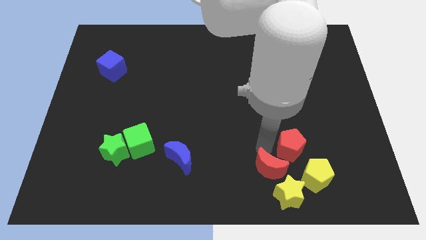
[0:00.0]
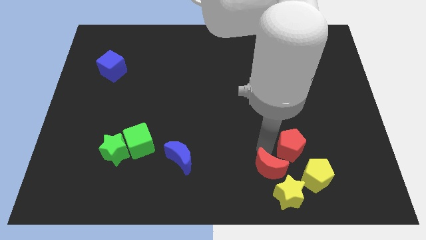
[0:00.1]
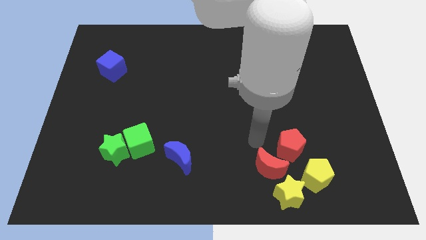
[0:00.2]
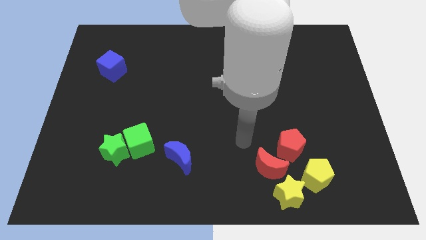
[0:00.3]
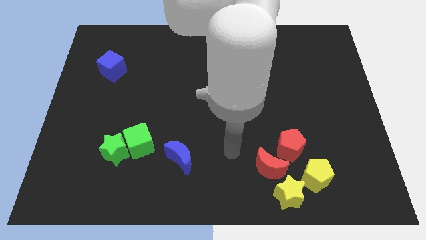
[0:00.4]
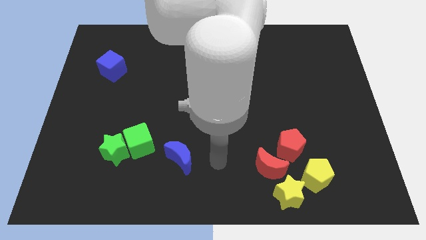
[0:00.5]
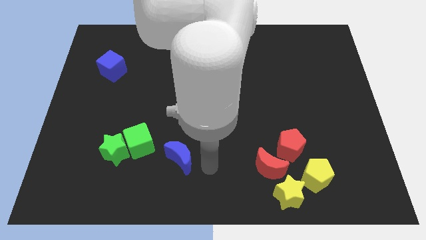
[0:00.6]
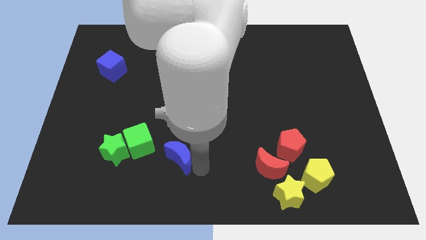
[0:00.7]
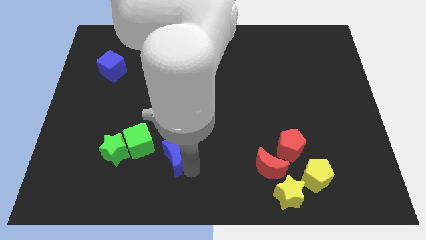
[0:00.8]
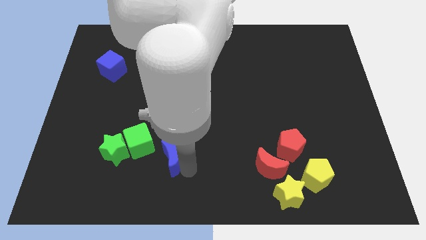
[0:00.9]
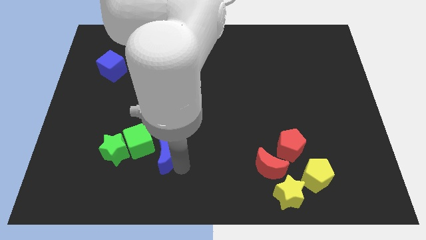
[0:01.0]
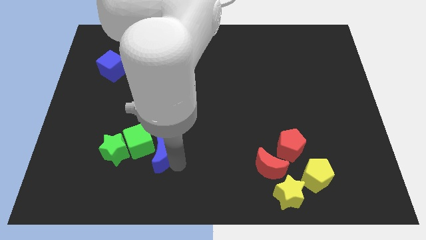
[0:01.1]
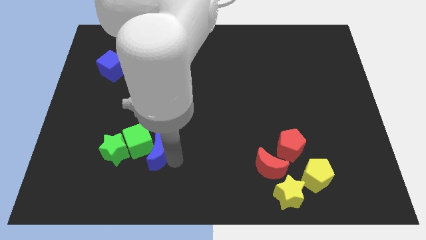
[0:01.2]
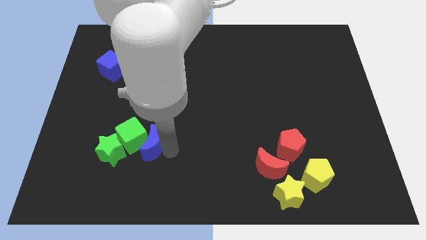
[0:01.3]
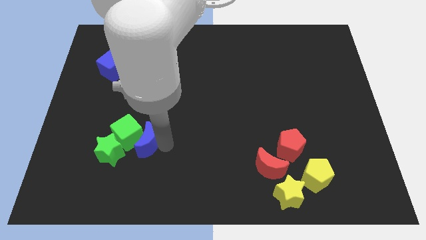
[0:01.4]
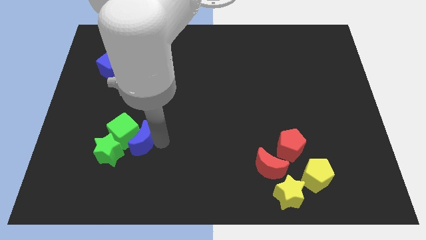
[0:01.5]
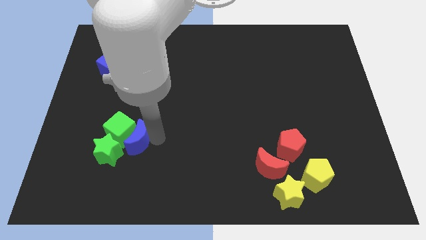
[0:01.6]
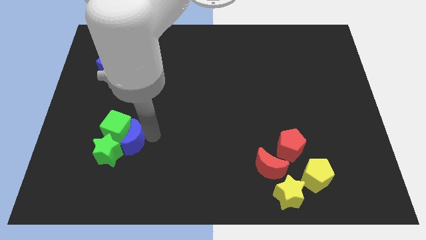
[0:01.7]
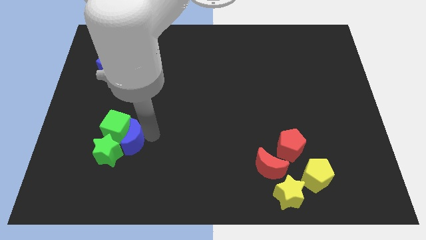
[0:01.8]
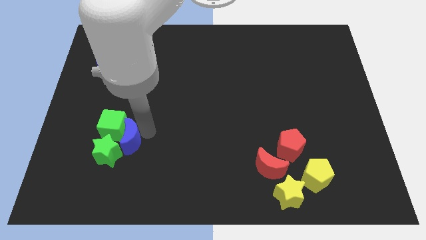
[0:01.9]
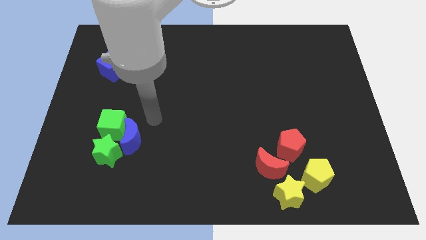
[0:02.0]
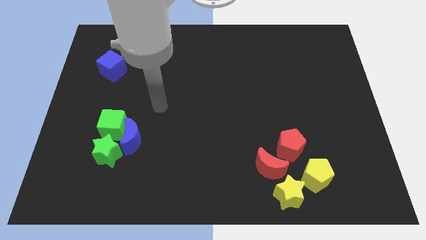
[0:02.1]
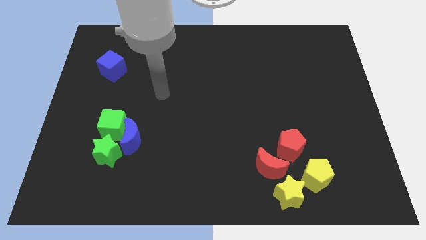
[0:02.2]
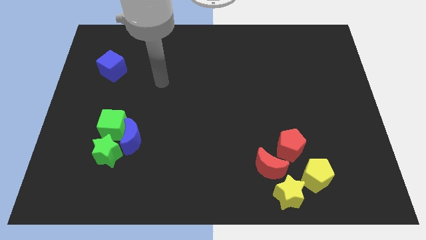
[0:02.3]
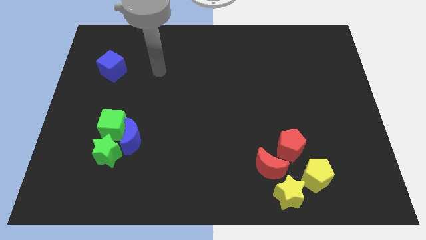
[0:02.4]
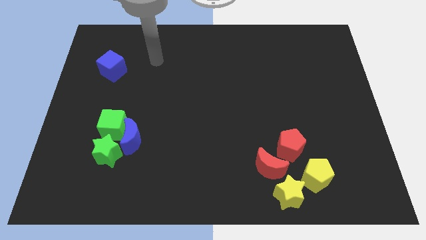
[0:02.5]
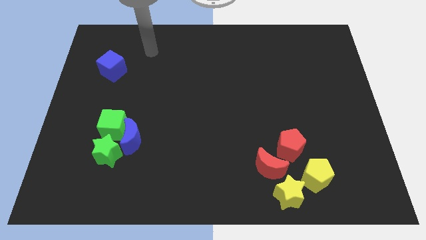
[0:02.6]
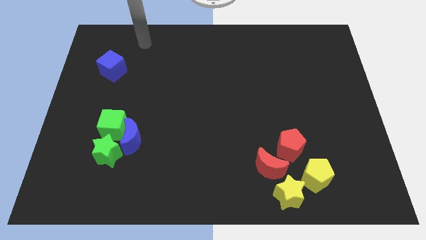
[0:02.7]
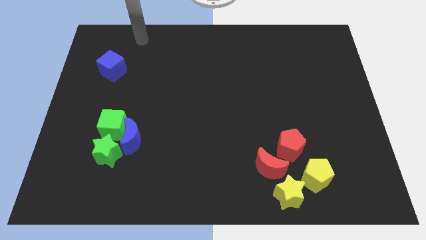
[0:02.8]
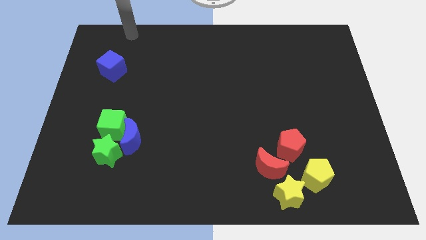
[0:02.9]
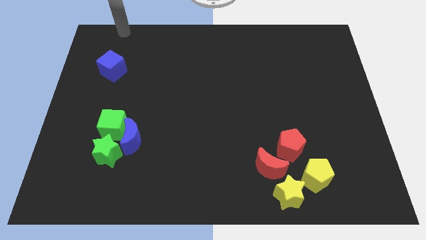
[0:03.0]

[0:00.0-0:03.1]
push the blue crescent into the group of green blocks

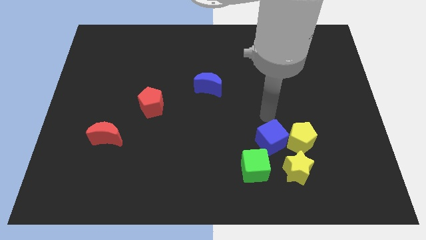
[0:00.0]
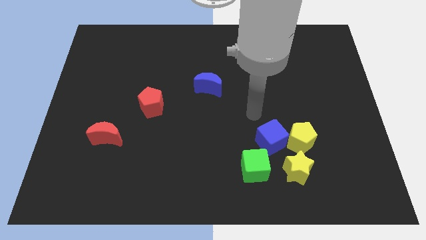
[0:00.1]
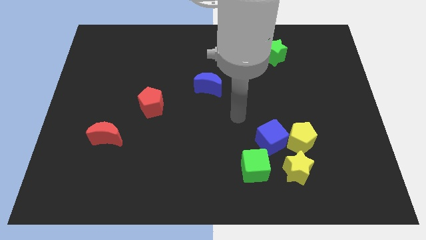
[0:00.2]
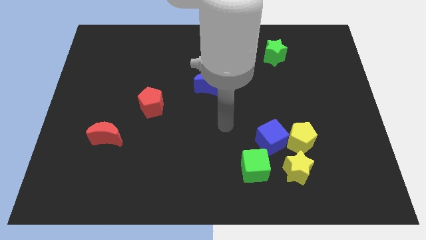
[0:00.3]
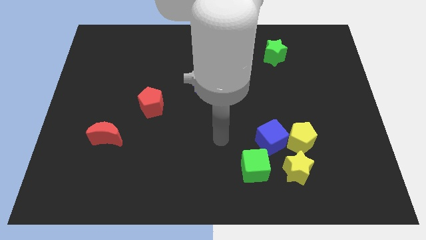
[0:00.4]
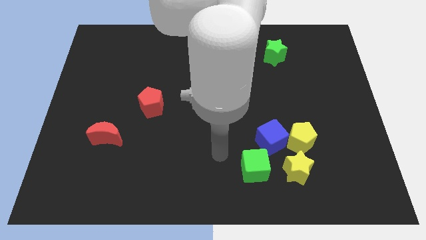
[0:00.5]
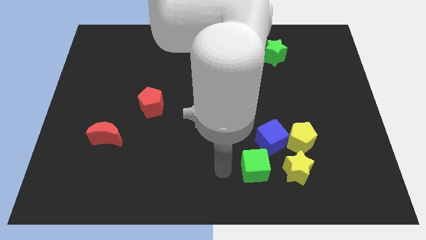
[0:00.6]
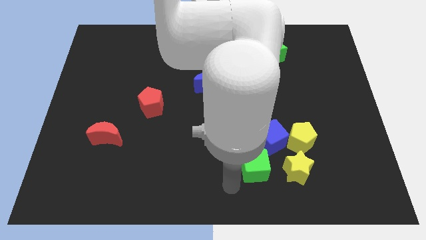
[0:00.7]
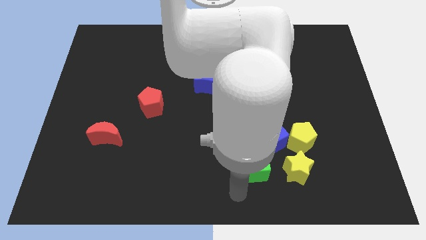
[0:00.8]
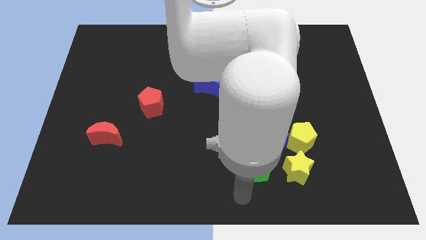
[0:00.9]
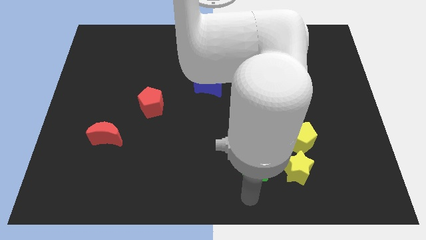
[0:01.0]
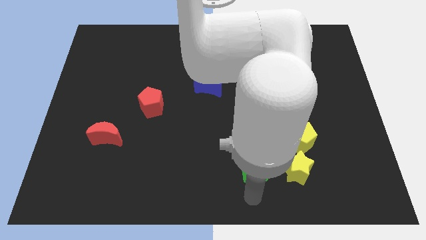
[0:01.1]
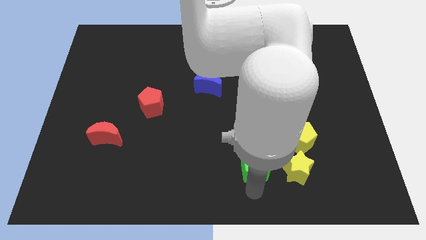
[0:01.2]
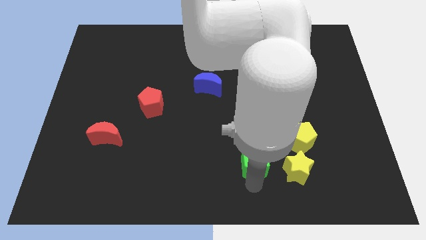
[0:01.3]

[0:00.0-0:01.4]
put your hand vertically below the green cube

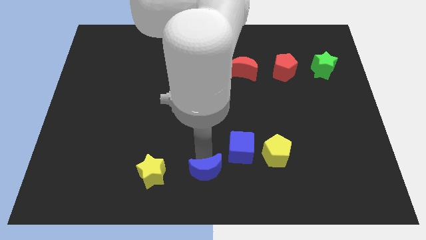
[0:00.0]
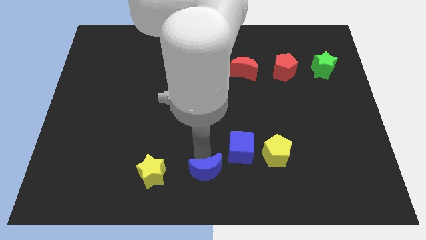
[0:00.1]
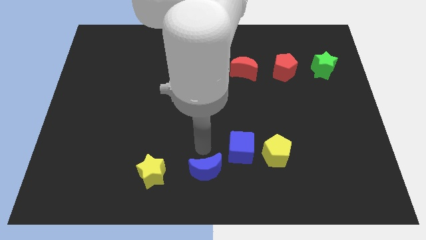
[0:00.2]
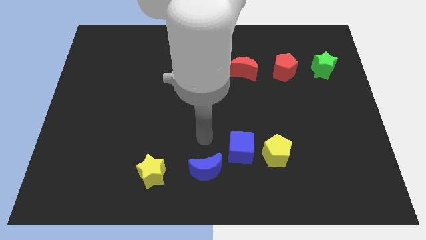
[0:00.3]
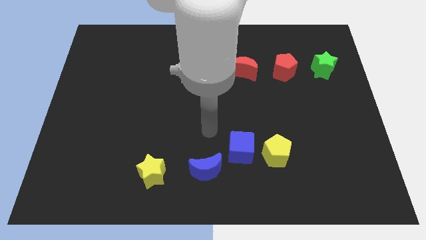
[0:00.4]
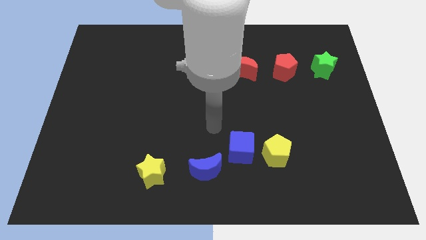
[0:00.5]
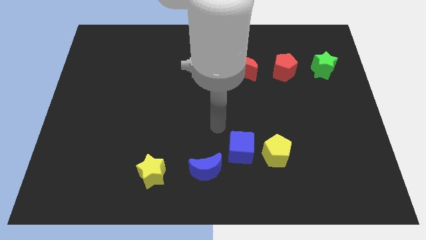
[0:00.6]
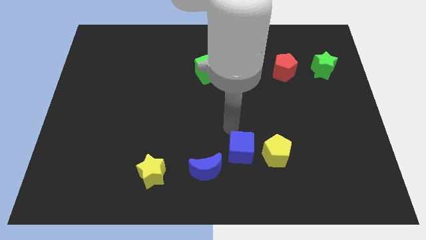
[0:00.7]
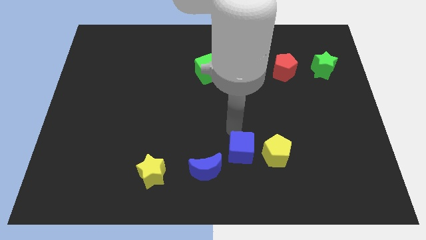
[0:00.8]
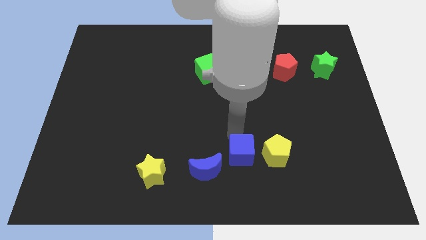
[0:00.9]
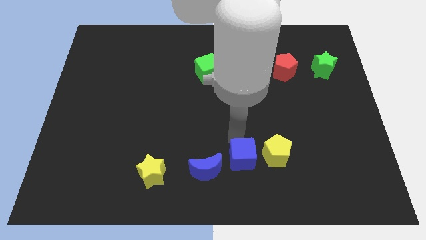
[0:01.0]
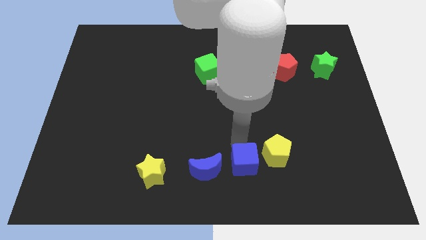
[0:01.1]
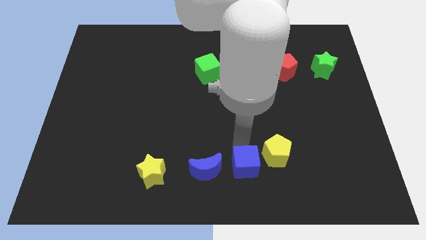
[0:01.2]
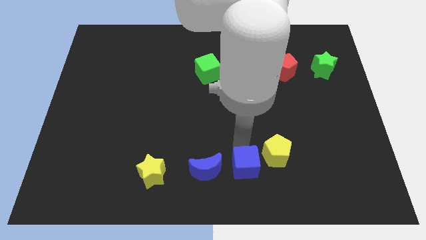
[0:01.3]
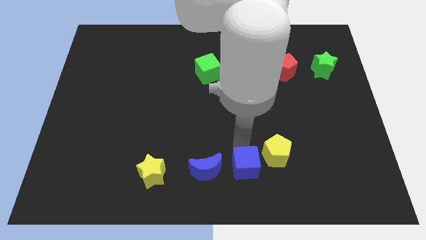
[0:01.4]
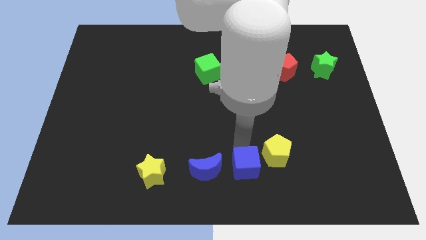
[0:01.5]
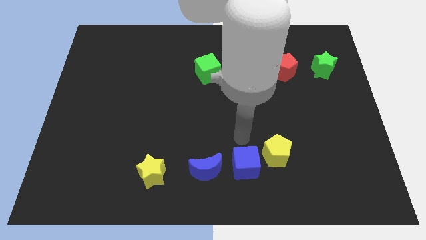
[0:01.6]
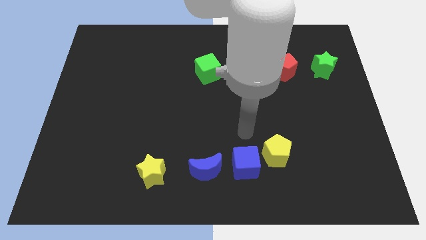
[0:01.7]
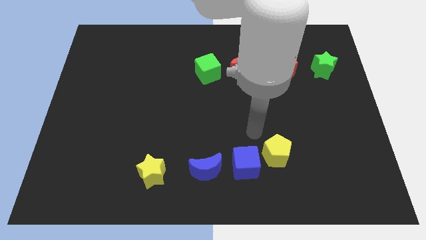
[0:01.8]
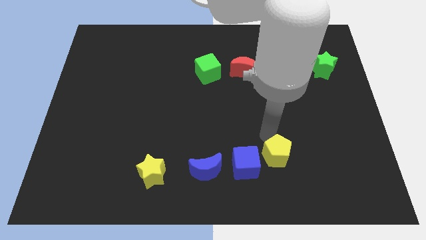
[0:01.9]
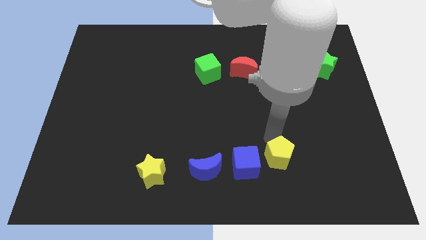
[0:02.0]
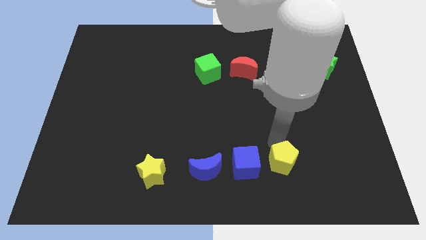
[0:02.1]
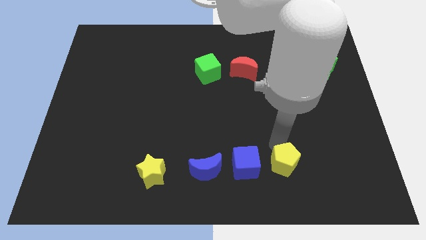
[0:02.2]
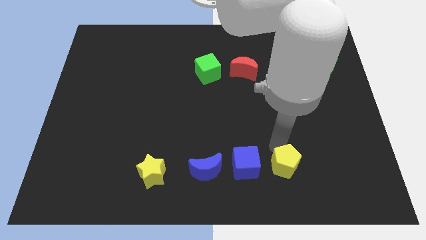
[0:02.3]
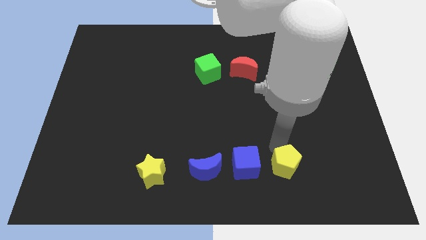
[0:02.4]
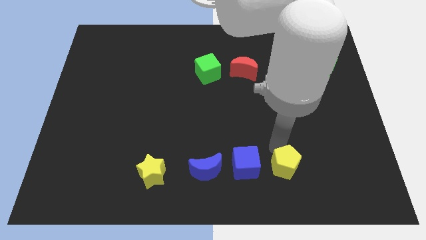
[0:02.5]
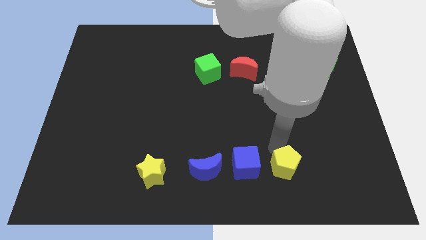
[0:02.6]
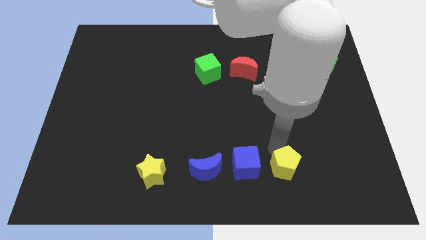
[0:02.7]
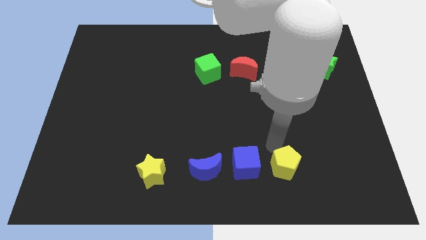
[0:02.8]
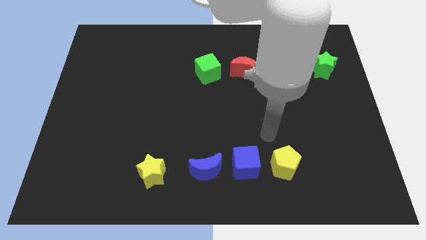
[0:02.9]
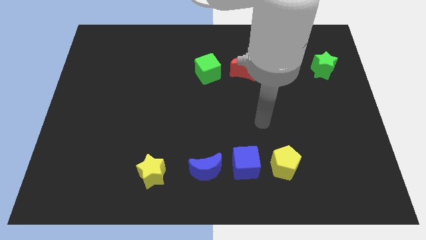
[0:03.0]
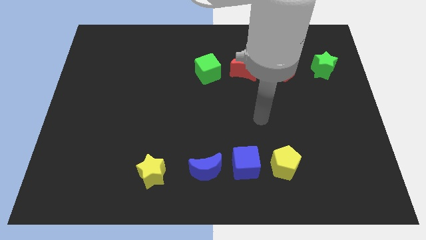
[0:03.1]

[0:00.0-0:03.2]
push the blue cube and the yellow pentagon slightly towards the bottom

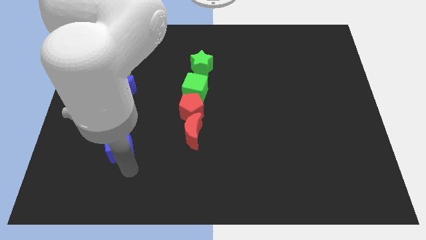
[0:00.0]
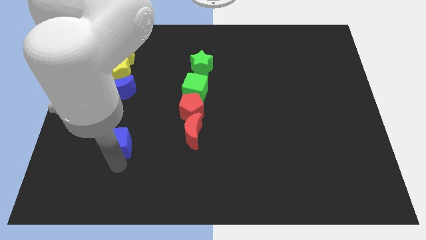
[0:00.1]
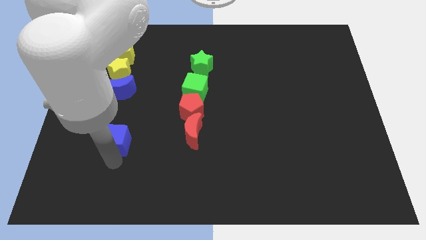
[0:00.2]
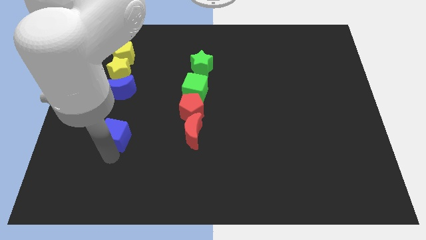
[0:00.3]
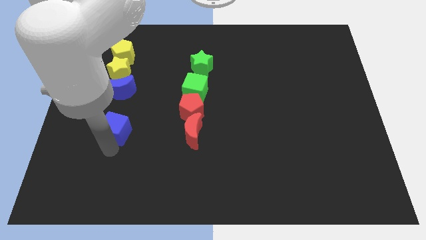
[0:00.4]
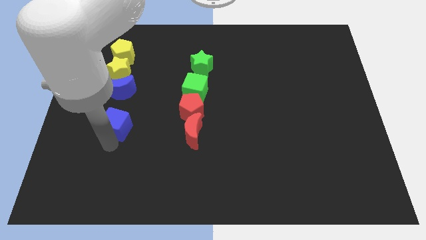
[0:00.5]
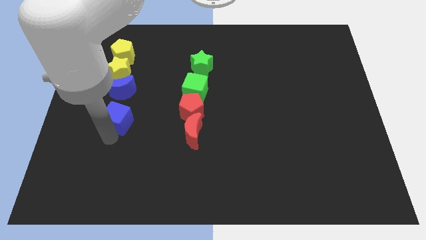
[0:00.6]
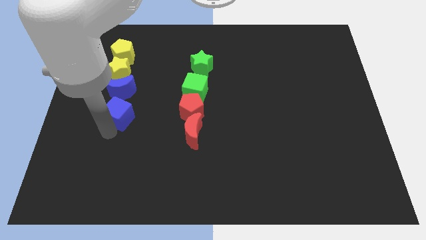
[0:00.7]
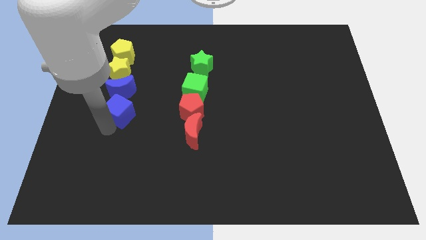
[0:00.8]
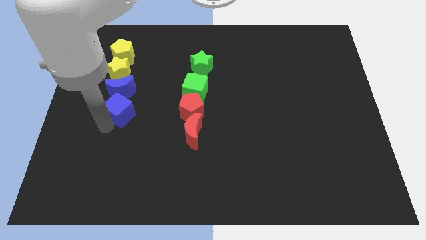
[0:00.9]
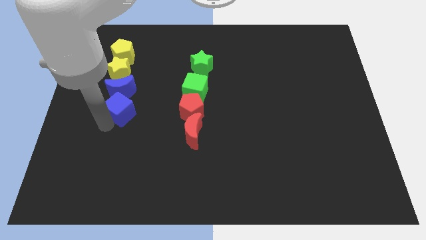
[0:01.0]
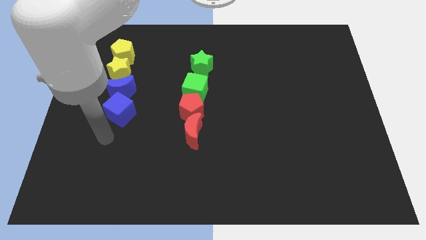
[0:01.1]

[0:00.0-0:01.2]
push the blue cube to form a vertical line with a group of blocks
